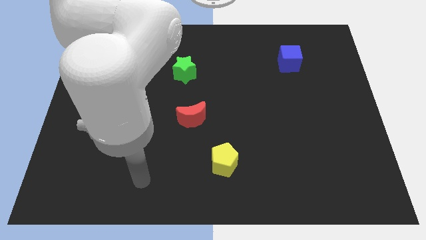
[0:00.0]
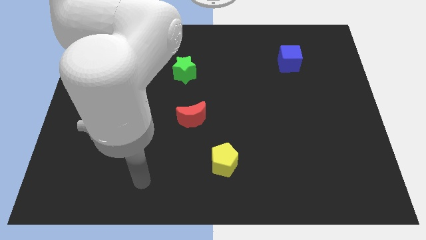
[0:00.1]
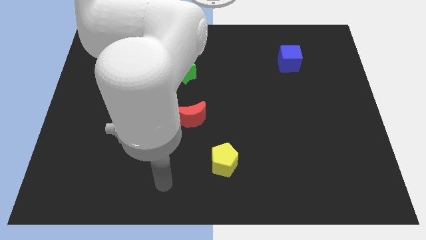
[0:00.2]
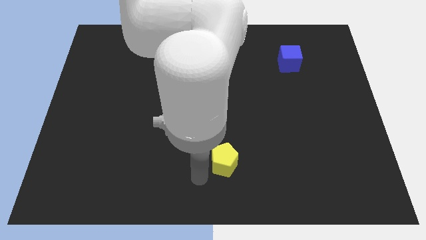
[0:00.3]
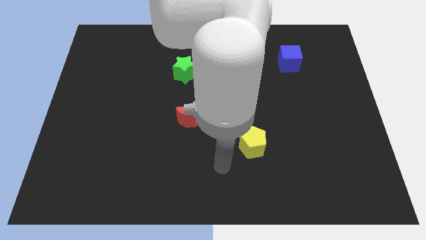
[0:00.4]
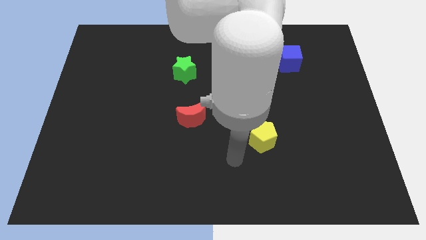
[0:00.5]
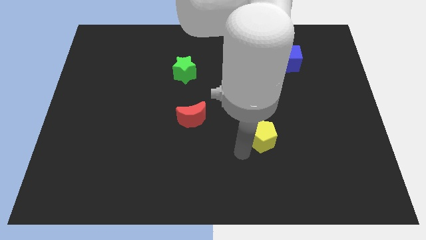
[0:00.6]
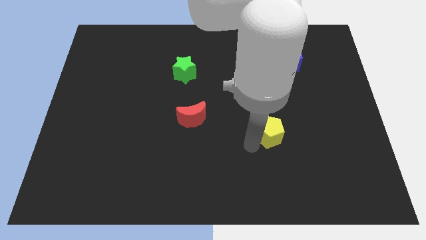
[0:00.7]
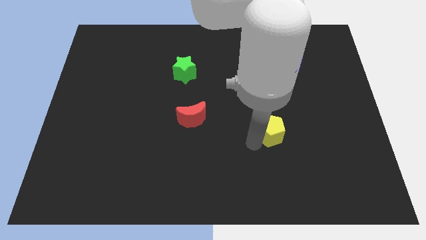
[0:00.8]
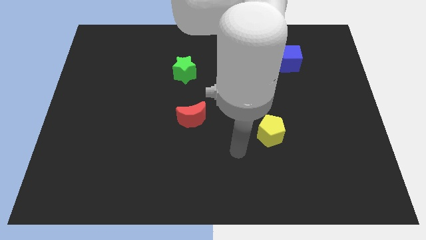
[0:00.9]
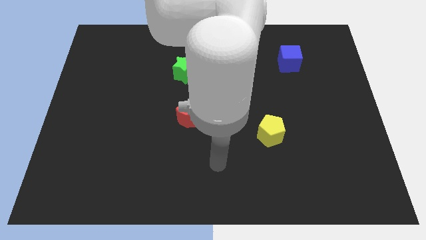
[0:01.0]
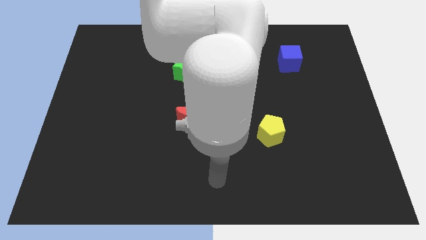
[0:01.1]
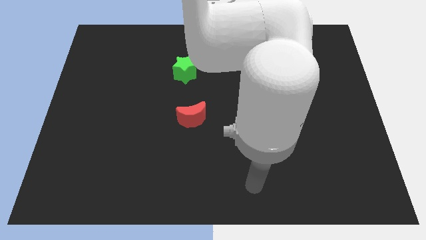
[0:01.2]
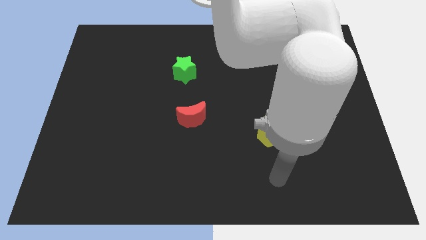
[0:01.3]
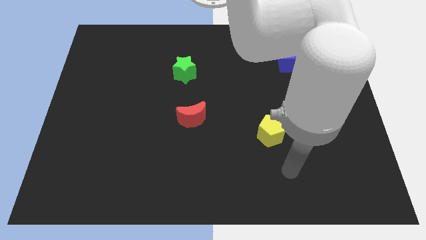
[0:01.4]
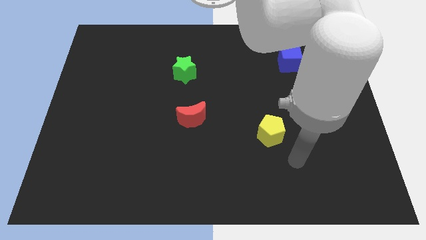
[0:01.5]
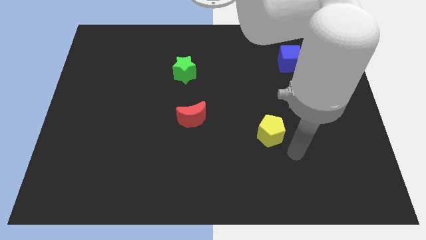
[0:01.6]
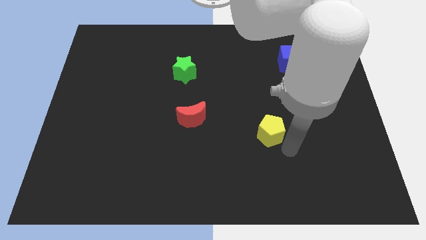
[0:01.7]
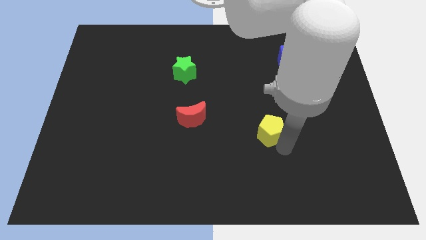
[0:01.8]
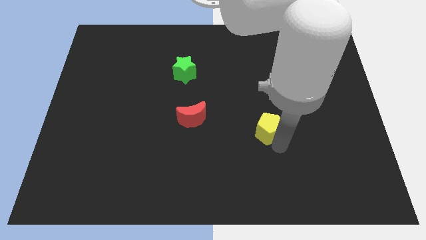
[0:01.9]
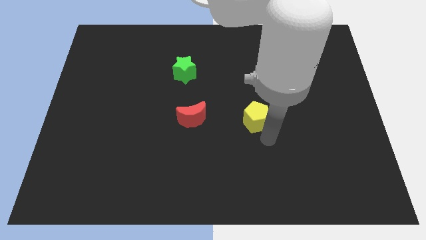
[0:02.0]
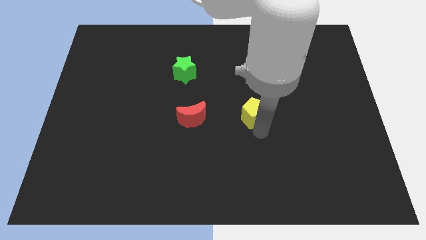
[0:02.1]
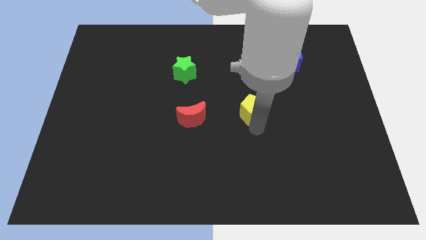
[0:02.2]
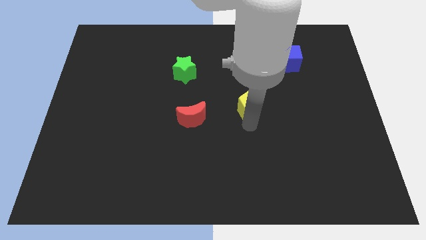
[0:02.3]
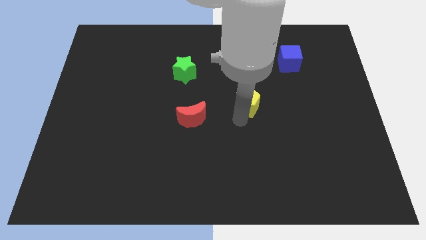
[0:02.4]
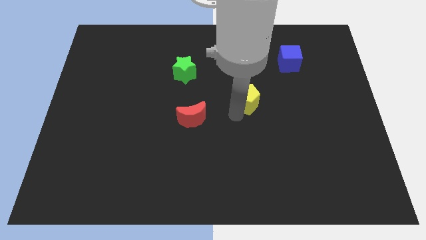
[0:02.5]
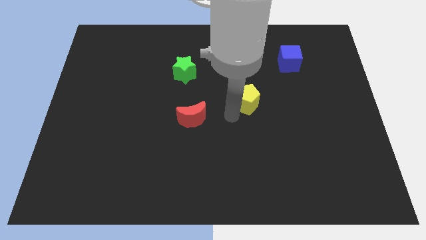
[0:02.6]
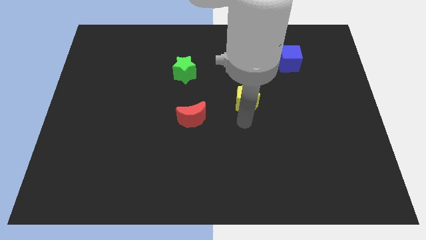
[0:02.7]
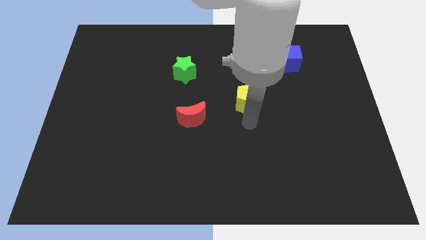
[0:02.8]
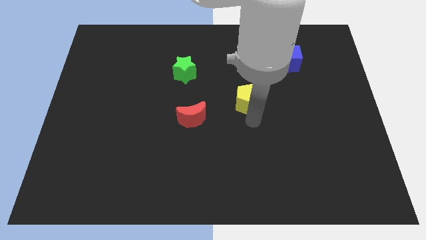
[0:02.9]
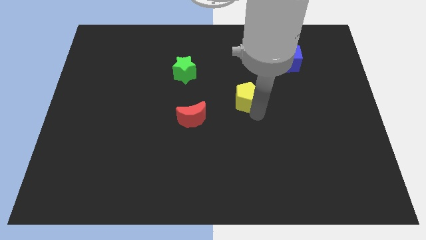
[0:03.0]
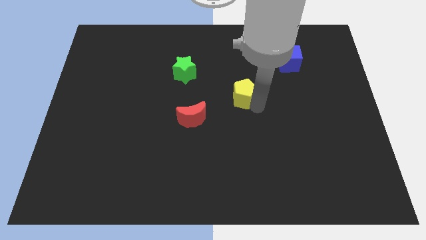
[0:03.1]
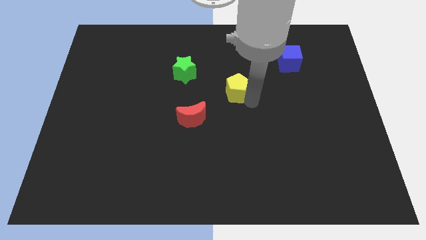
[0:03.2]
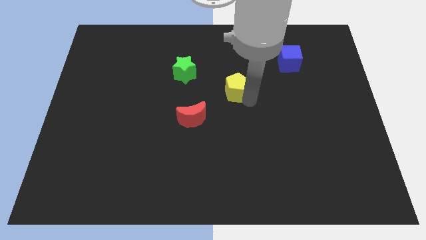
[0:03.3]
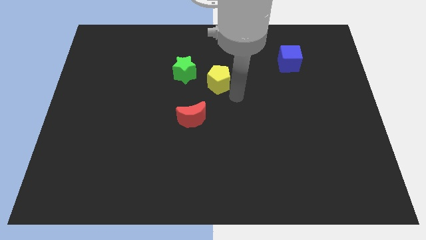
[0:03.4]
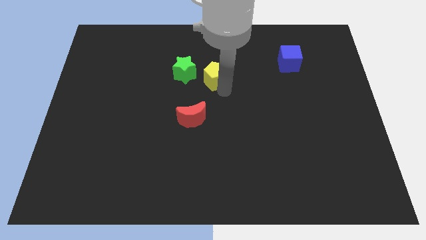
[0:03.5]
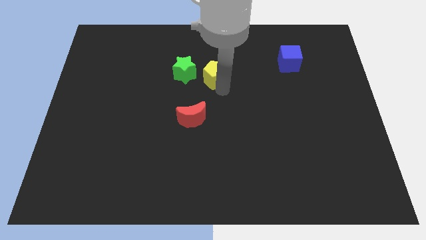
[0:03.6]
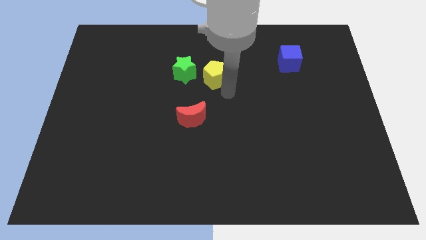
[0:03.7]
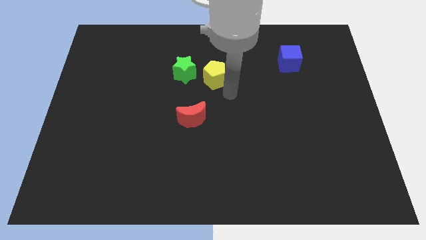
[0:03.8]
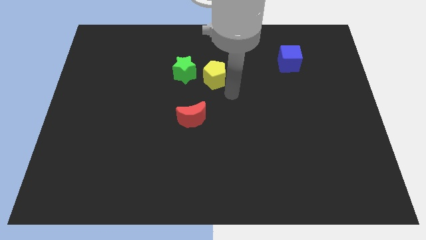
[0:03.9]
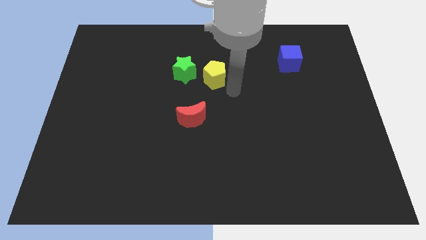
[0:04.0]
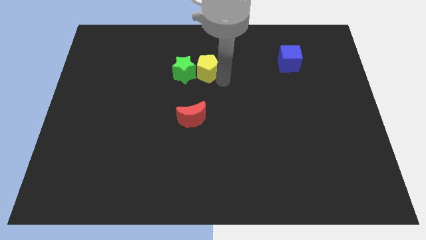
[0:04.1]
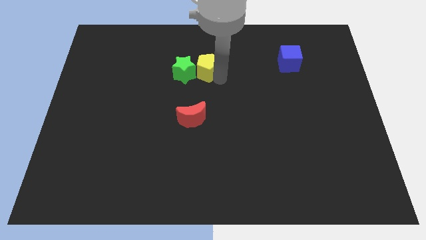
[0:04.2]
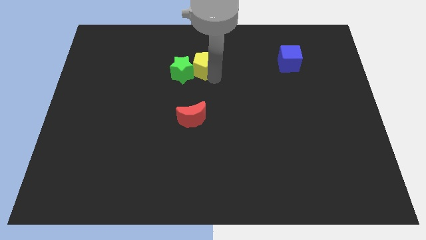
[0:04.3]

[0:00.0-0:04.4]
slide the yellow pentagon next to the star

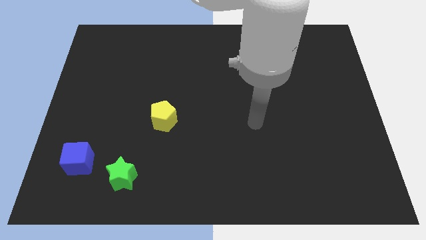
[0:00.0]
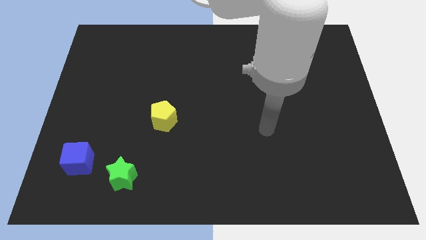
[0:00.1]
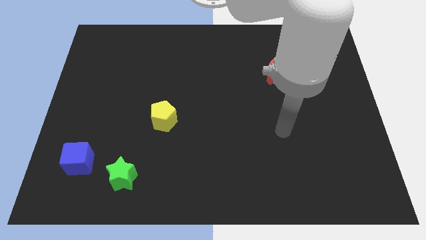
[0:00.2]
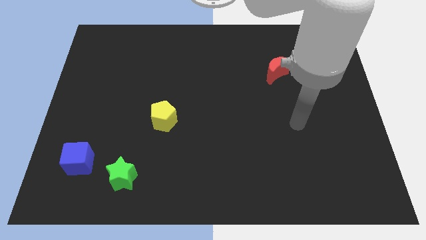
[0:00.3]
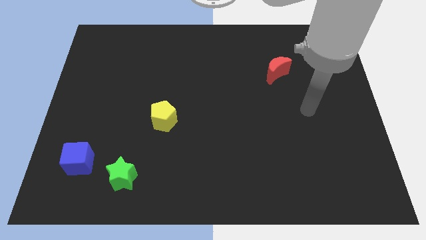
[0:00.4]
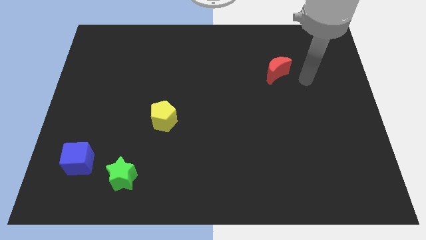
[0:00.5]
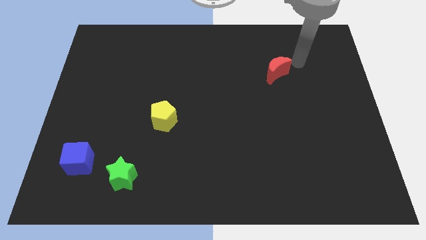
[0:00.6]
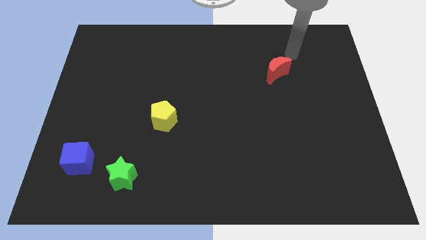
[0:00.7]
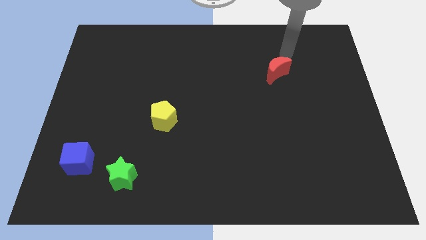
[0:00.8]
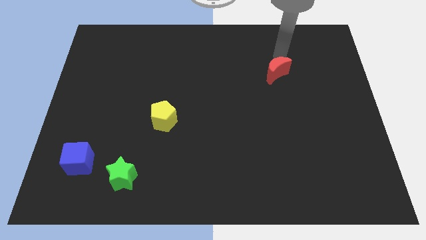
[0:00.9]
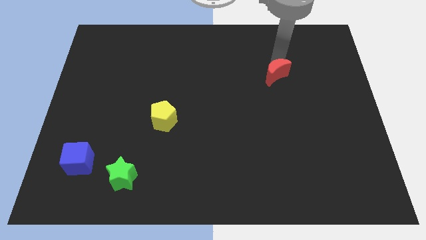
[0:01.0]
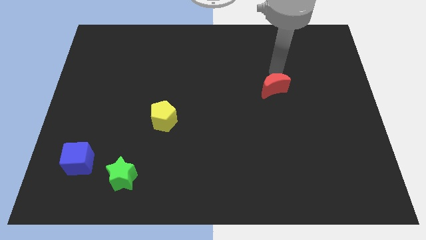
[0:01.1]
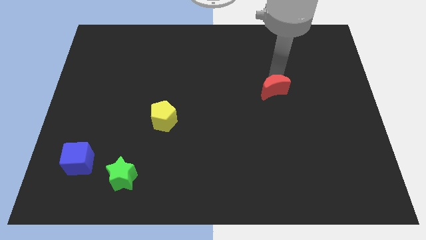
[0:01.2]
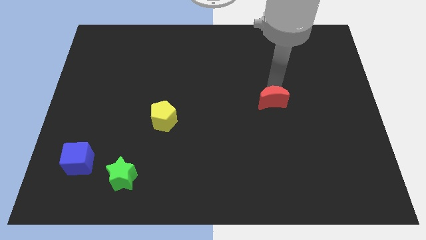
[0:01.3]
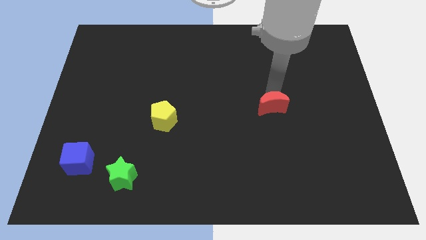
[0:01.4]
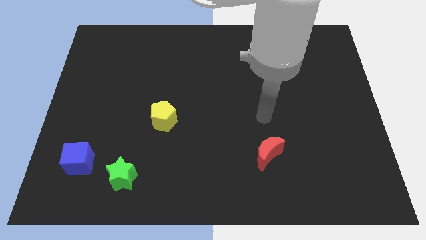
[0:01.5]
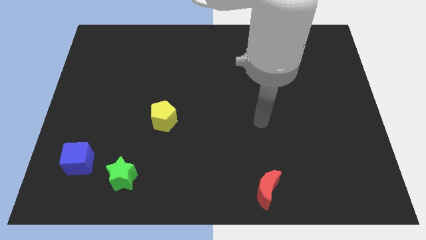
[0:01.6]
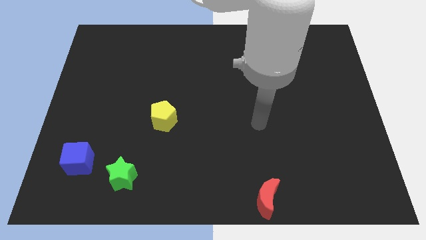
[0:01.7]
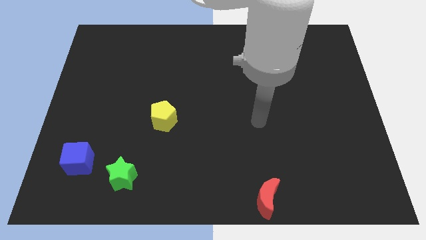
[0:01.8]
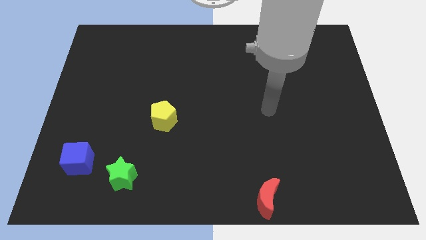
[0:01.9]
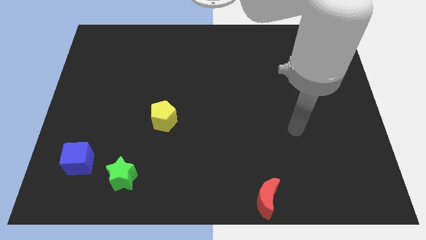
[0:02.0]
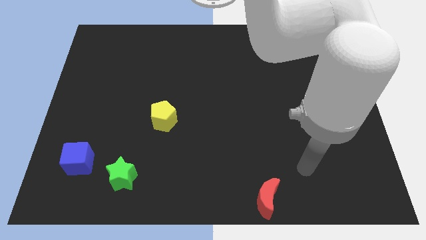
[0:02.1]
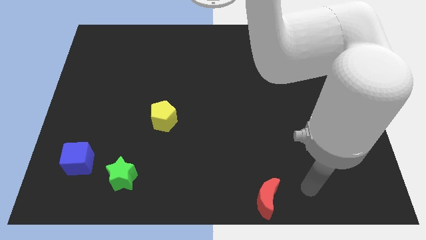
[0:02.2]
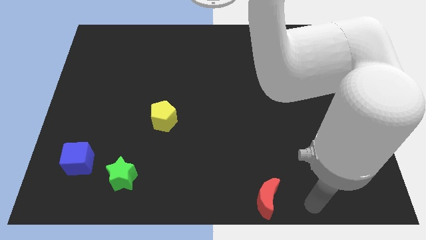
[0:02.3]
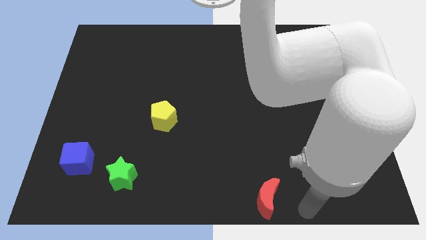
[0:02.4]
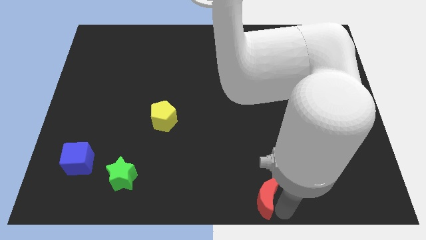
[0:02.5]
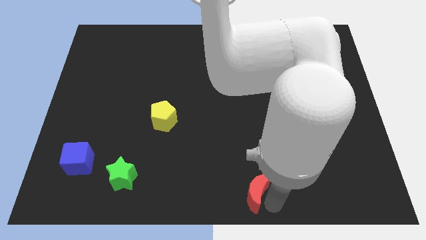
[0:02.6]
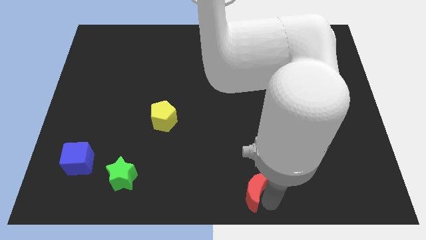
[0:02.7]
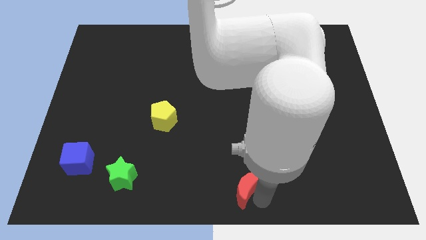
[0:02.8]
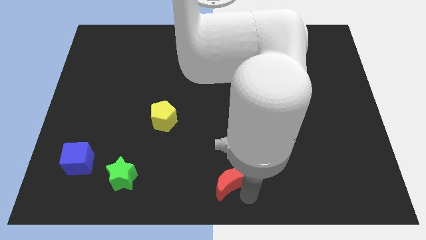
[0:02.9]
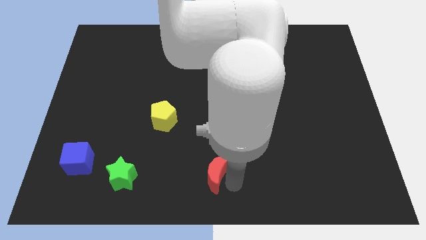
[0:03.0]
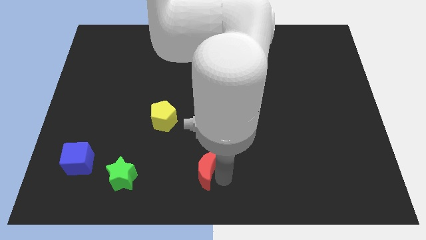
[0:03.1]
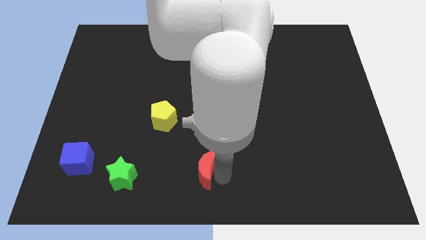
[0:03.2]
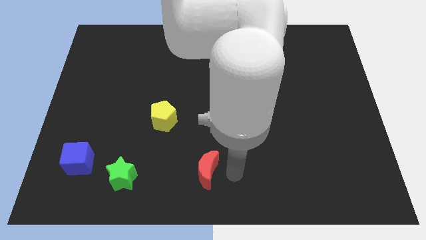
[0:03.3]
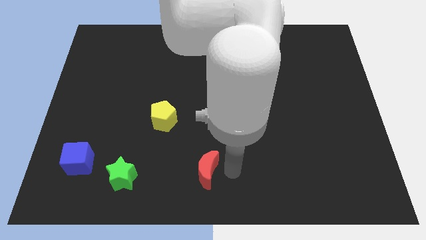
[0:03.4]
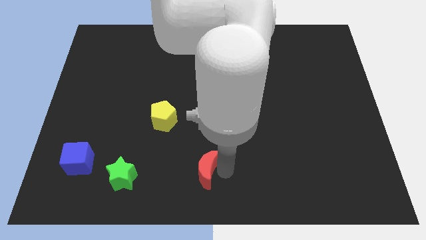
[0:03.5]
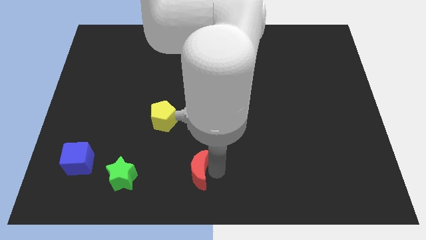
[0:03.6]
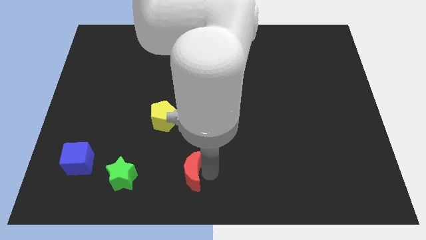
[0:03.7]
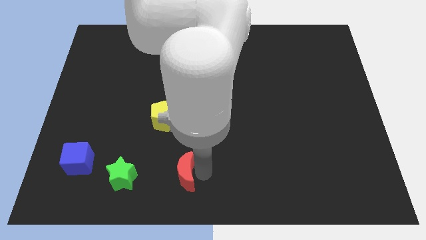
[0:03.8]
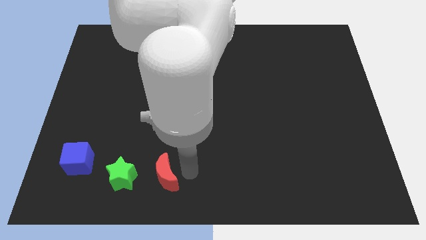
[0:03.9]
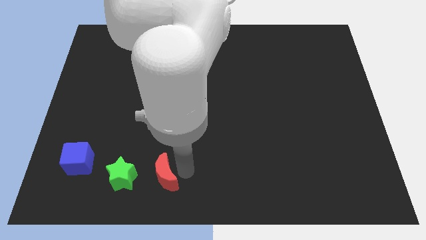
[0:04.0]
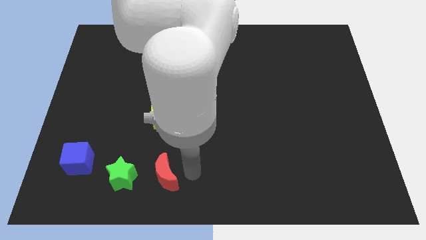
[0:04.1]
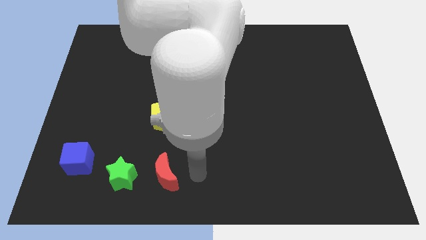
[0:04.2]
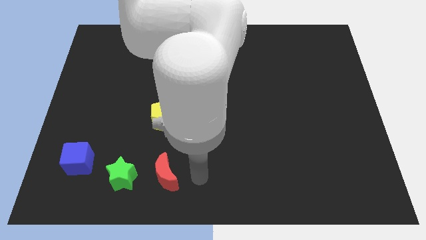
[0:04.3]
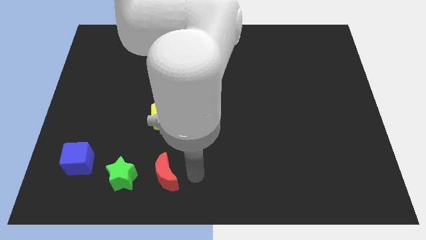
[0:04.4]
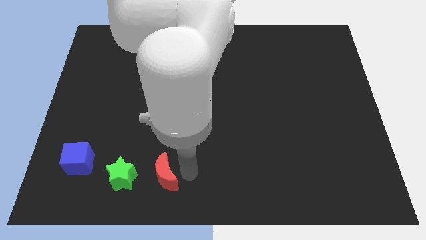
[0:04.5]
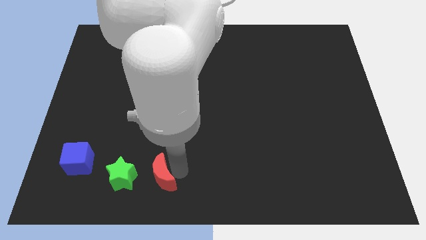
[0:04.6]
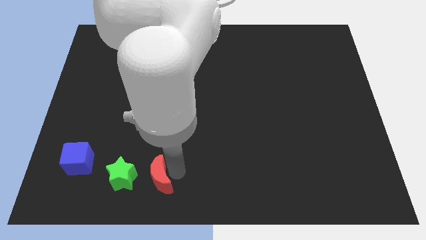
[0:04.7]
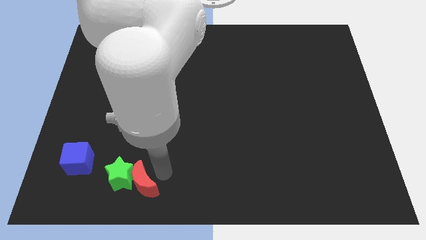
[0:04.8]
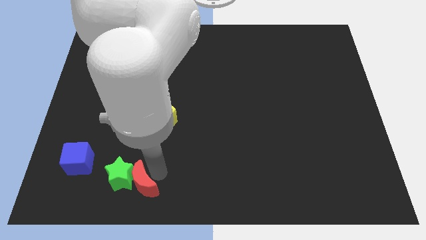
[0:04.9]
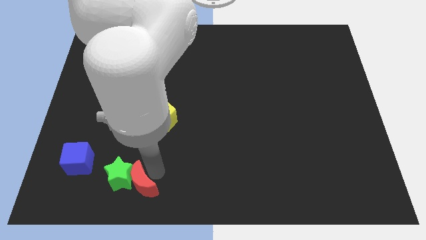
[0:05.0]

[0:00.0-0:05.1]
move the red moon towards the green block
